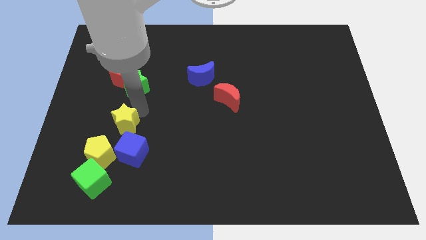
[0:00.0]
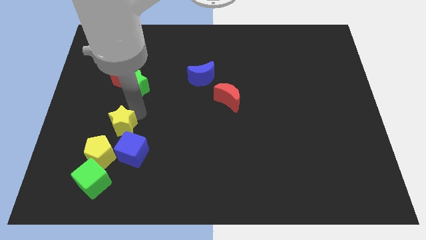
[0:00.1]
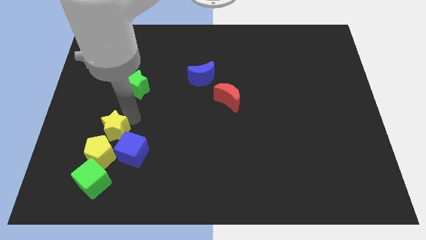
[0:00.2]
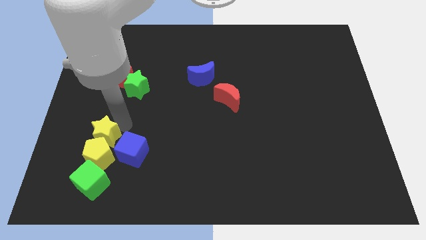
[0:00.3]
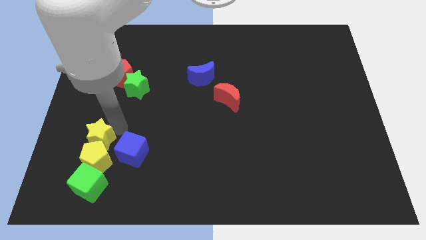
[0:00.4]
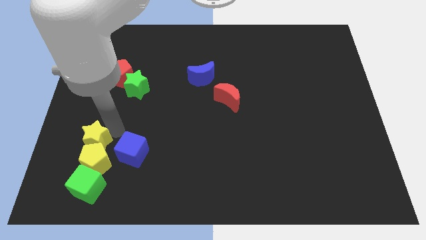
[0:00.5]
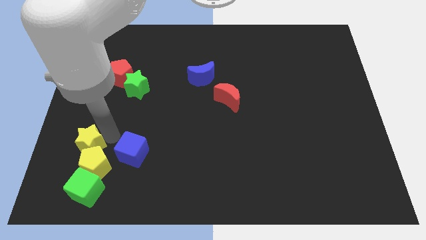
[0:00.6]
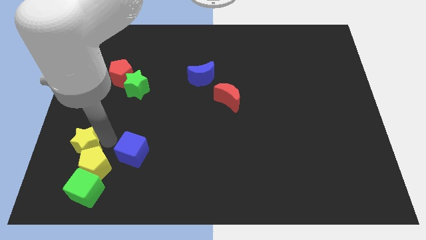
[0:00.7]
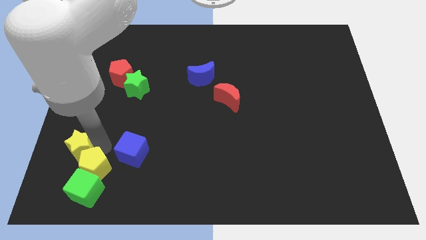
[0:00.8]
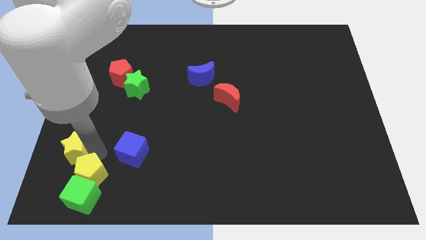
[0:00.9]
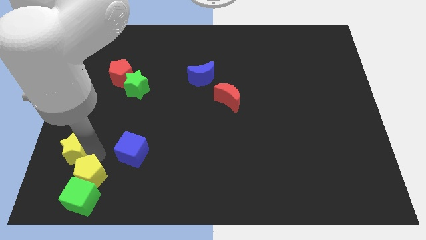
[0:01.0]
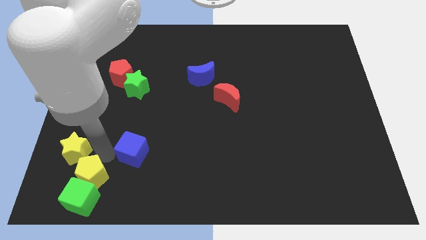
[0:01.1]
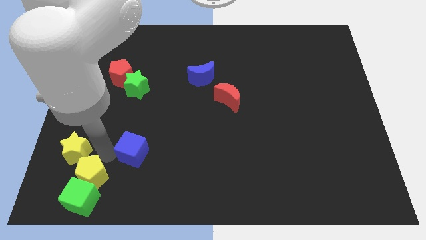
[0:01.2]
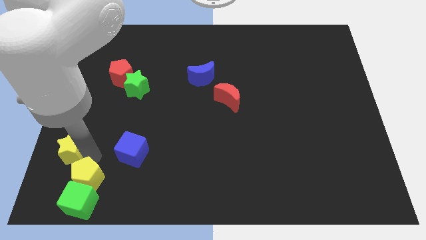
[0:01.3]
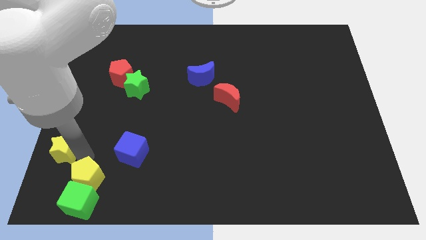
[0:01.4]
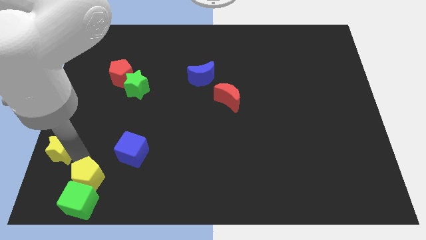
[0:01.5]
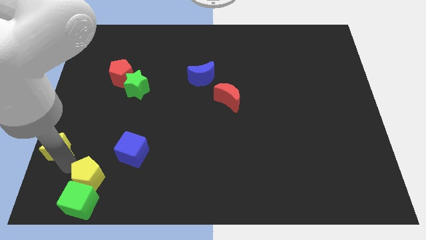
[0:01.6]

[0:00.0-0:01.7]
push the yellow star diagonally top left to the yellow pentagon

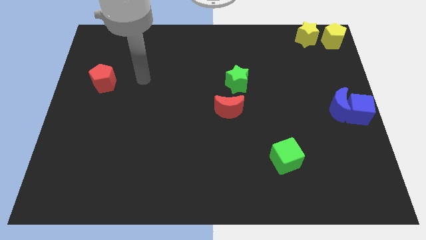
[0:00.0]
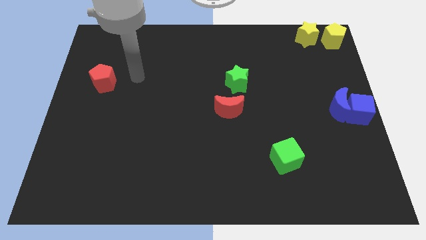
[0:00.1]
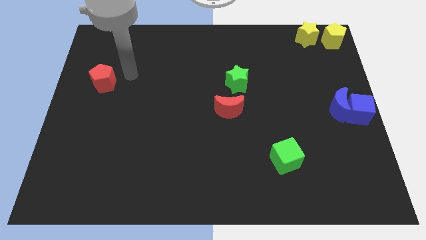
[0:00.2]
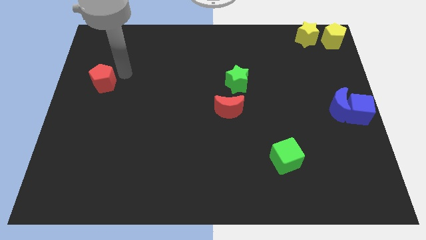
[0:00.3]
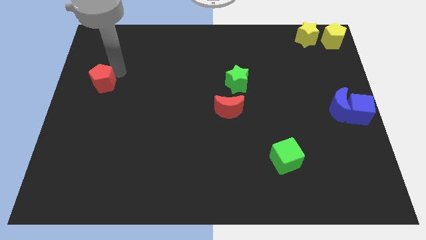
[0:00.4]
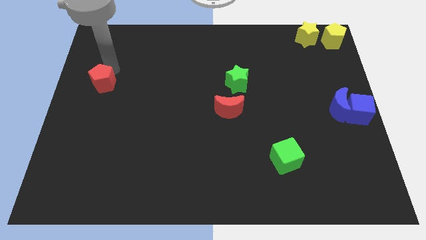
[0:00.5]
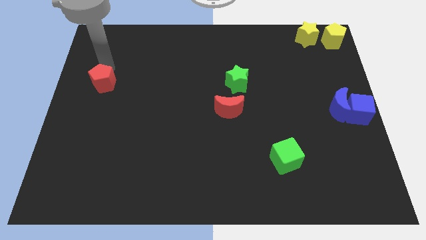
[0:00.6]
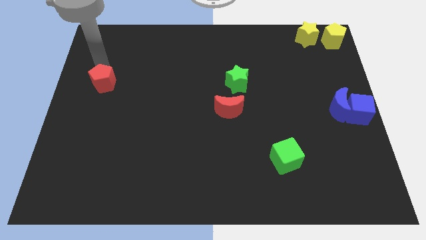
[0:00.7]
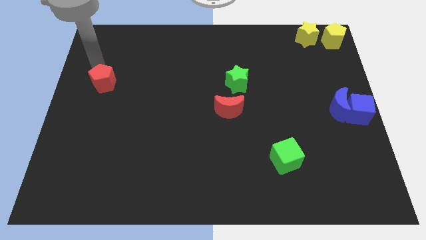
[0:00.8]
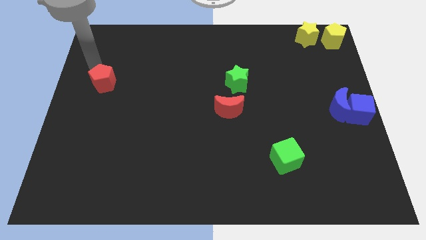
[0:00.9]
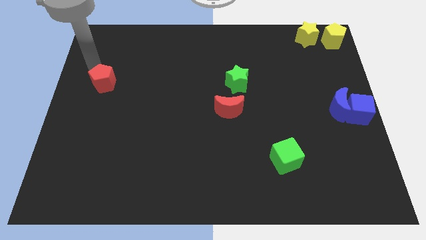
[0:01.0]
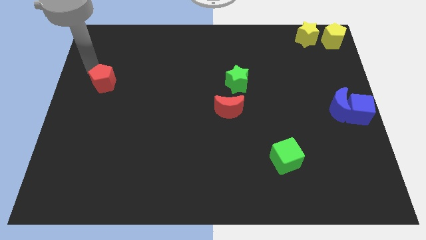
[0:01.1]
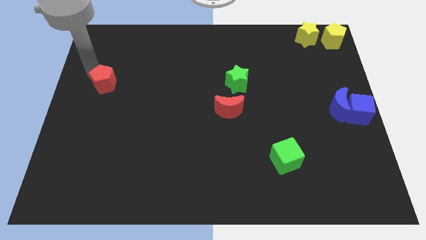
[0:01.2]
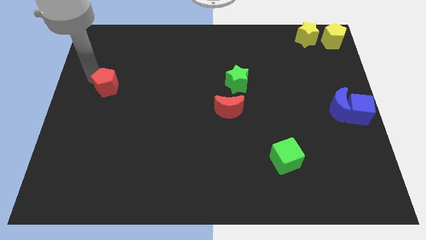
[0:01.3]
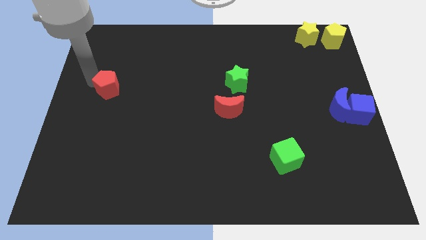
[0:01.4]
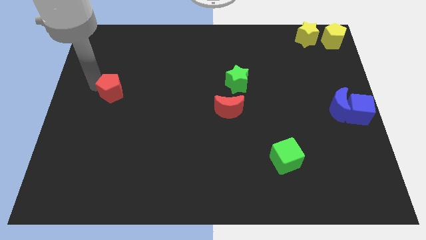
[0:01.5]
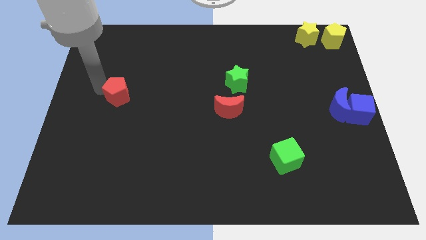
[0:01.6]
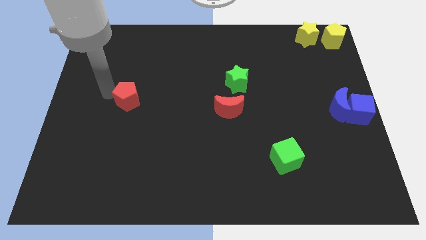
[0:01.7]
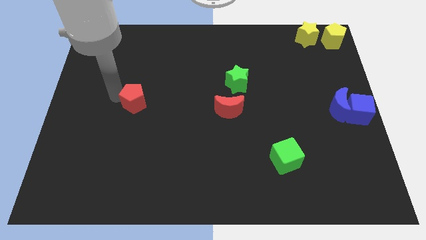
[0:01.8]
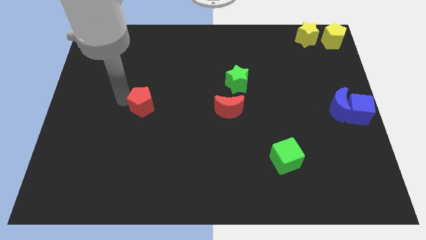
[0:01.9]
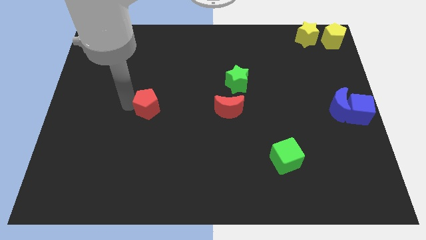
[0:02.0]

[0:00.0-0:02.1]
slide the red pentagon horizontally to the left side of the red moon

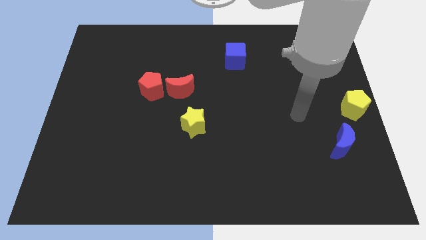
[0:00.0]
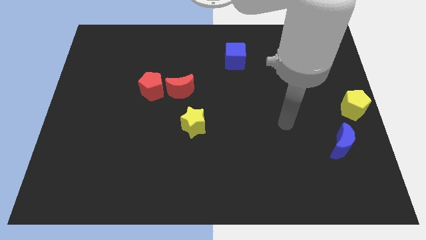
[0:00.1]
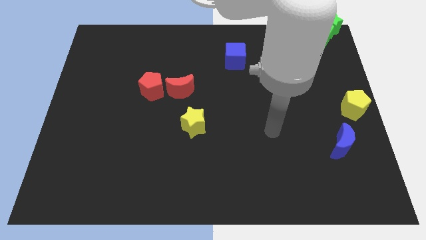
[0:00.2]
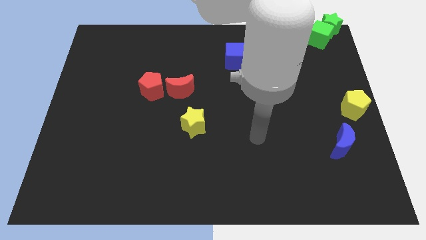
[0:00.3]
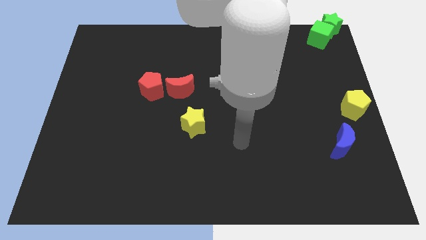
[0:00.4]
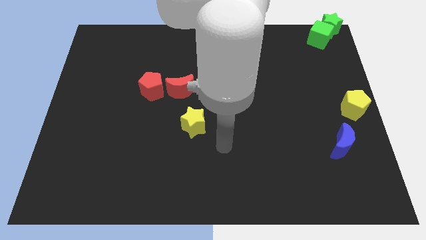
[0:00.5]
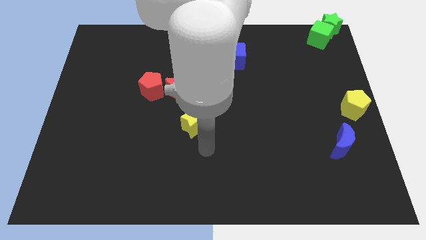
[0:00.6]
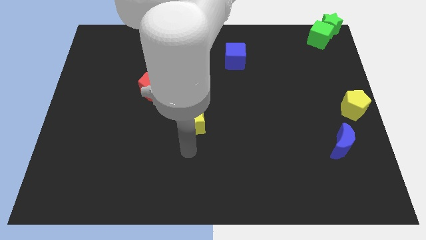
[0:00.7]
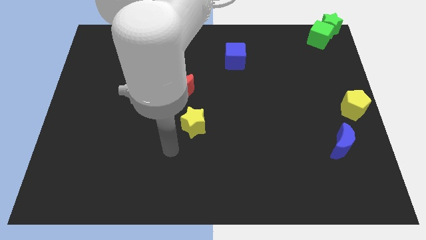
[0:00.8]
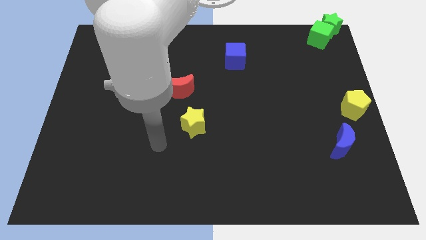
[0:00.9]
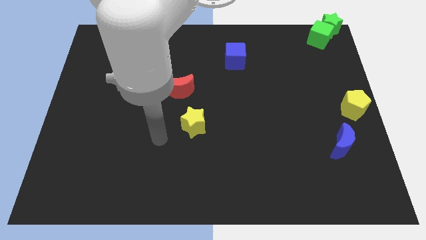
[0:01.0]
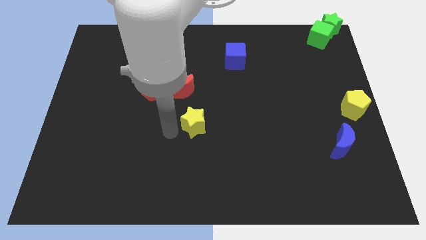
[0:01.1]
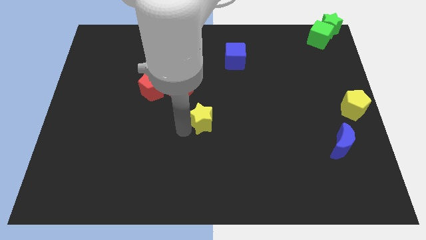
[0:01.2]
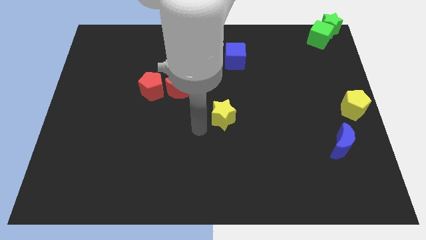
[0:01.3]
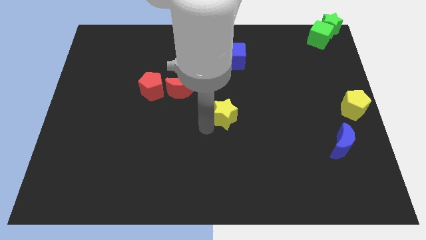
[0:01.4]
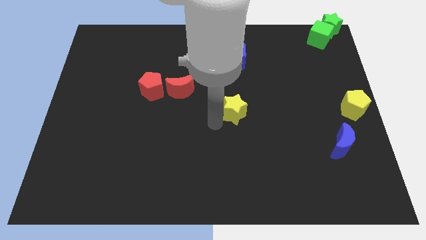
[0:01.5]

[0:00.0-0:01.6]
place a yellow star towards the center of the board

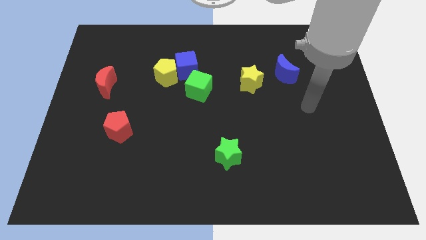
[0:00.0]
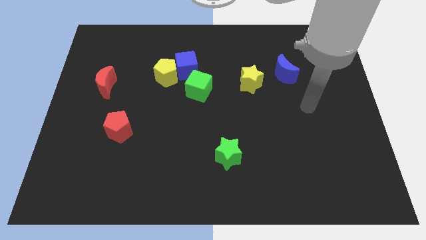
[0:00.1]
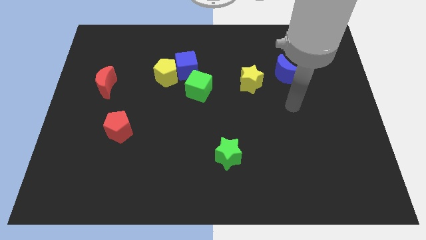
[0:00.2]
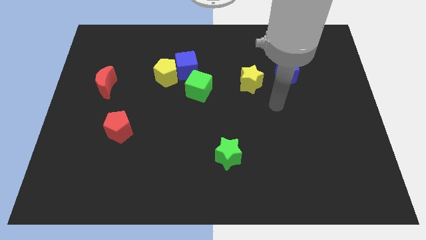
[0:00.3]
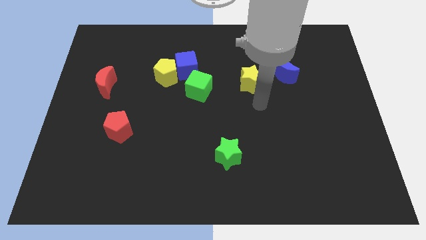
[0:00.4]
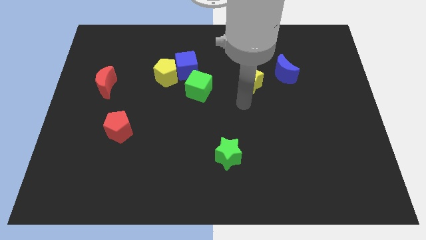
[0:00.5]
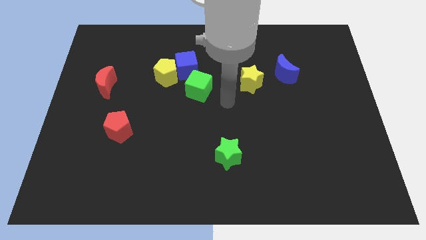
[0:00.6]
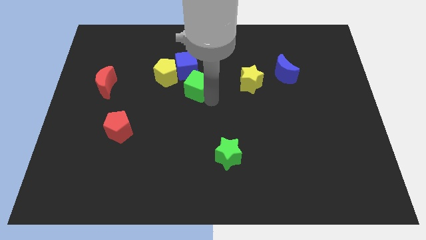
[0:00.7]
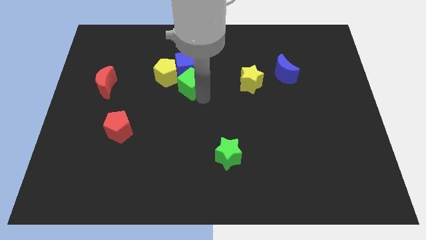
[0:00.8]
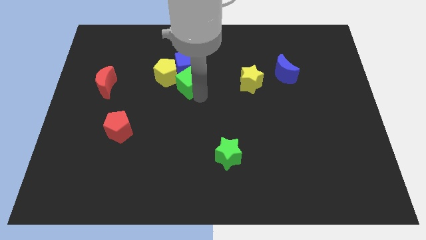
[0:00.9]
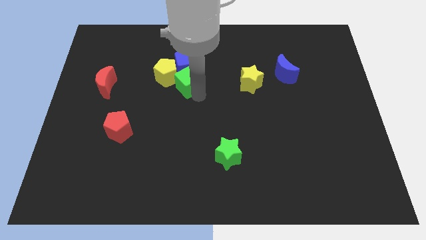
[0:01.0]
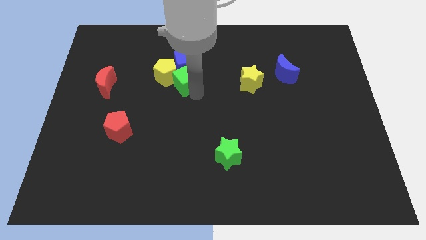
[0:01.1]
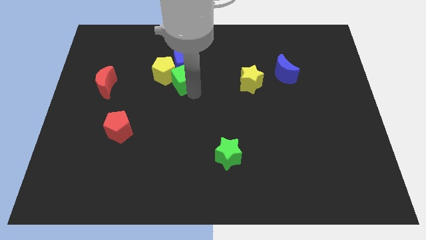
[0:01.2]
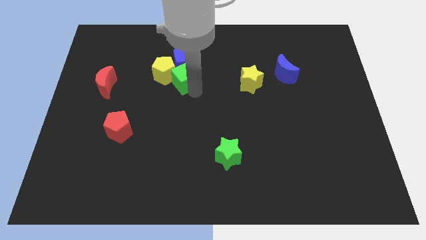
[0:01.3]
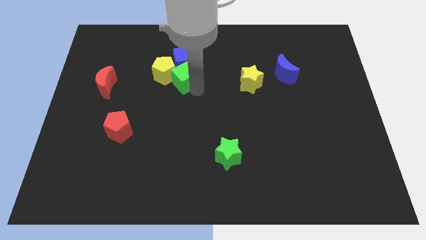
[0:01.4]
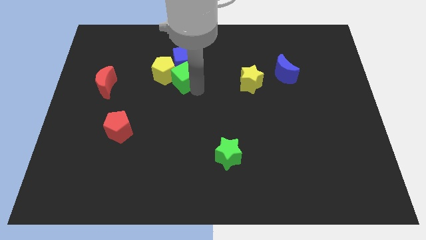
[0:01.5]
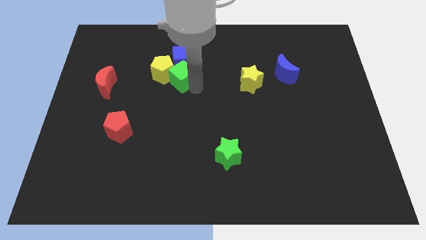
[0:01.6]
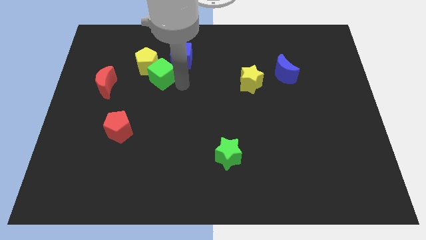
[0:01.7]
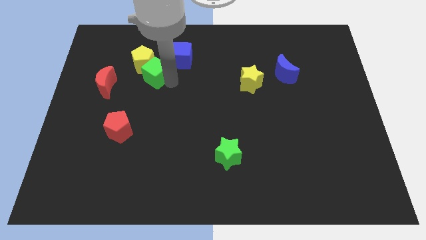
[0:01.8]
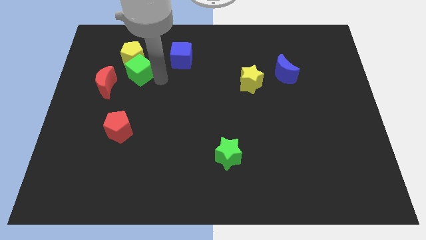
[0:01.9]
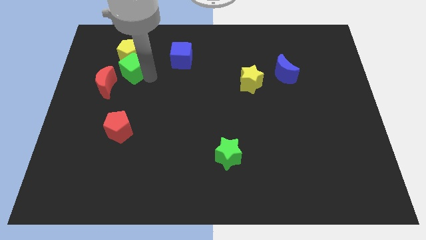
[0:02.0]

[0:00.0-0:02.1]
move the green cube towards the top left corner

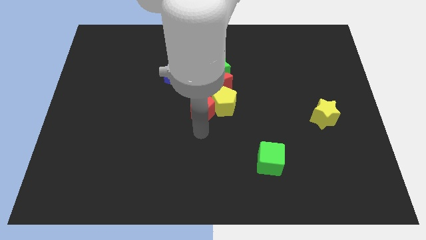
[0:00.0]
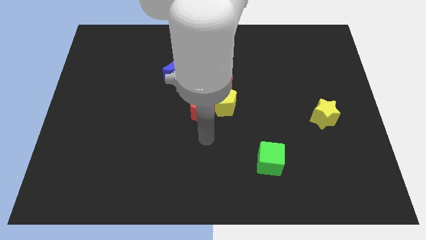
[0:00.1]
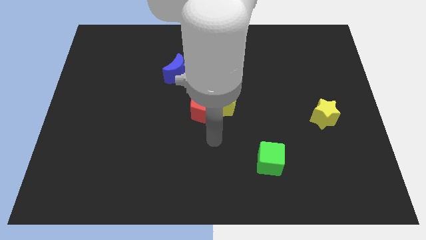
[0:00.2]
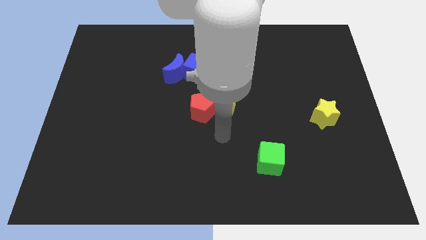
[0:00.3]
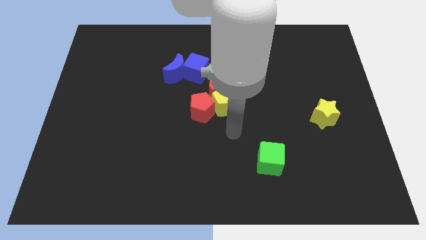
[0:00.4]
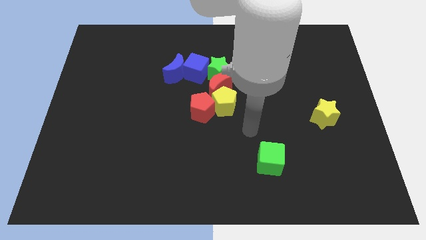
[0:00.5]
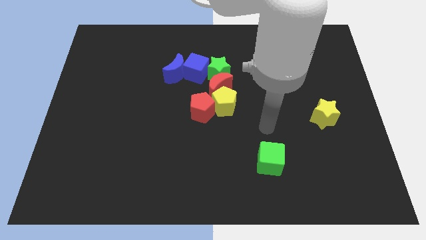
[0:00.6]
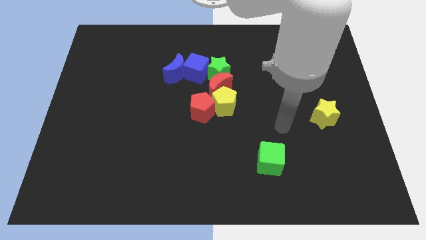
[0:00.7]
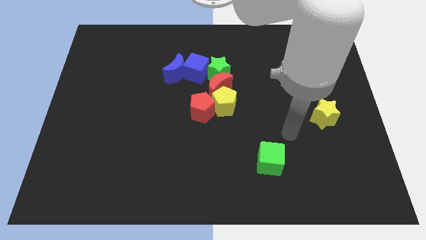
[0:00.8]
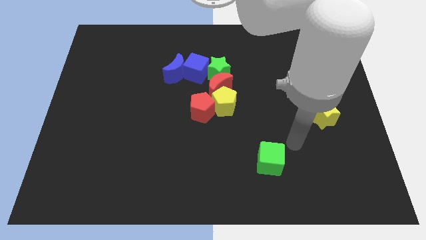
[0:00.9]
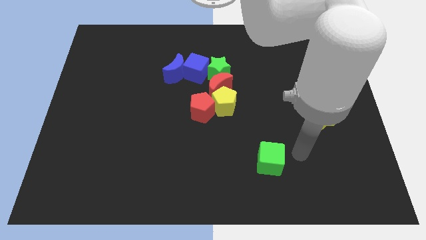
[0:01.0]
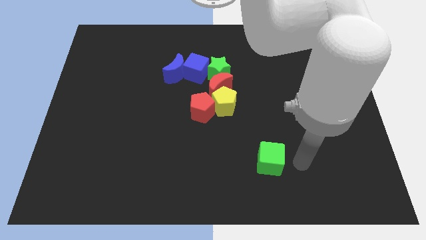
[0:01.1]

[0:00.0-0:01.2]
move the arm away from the red pentagon
